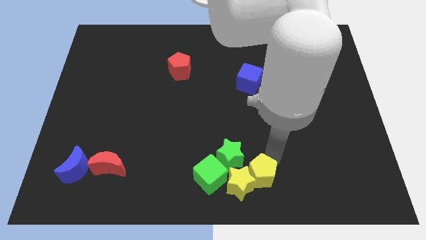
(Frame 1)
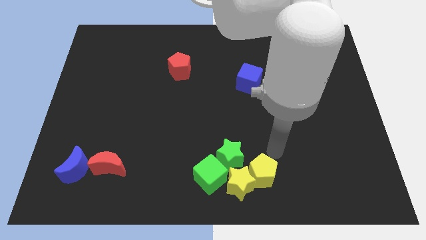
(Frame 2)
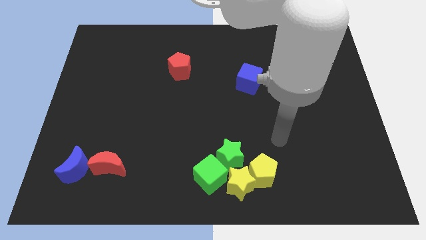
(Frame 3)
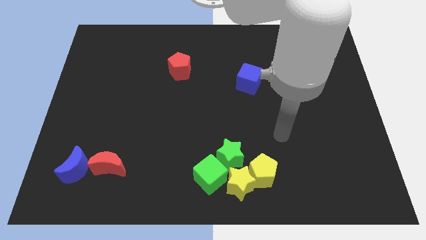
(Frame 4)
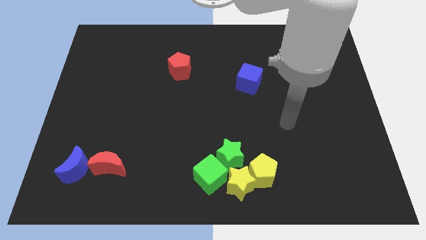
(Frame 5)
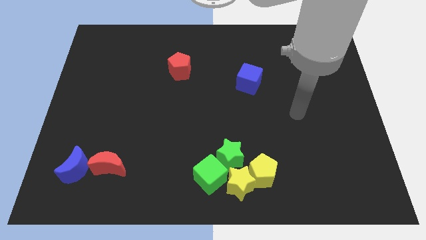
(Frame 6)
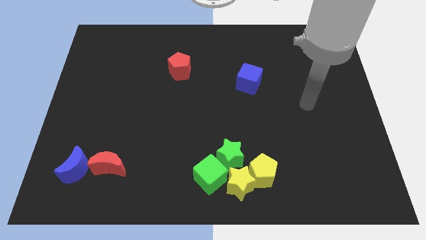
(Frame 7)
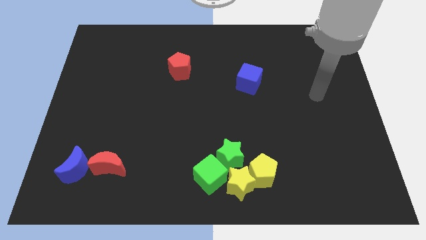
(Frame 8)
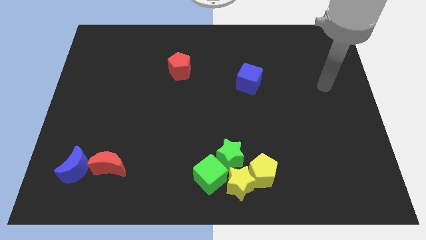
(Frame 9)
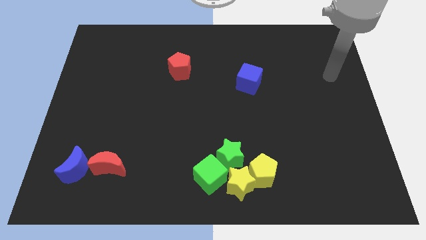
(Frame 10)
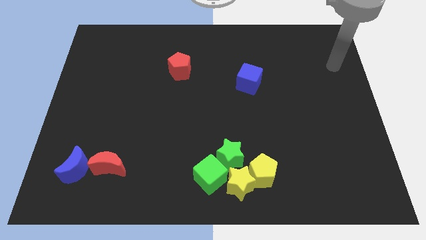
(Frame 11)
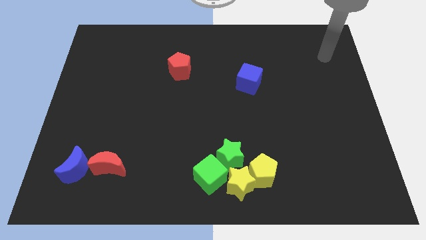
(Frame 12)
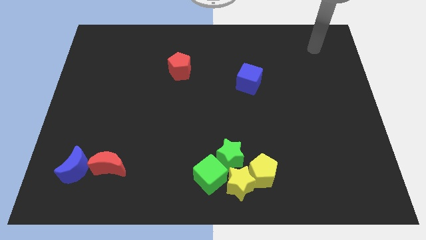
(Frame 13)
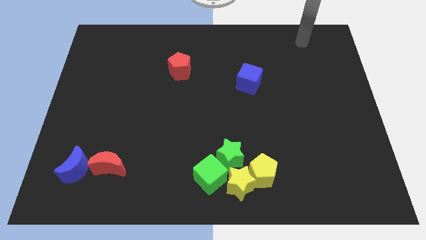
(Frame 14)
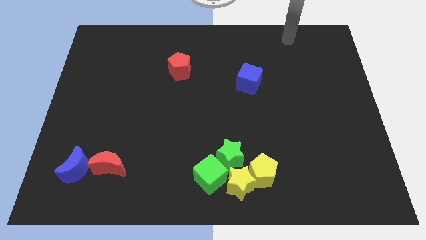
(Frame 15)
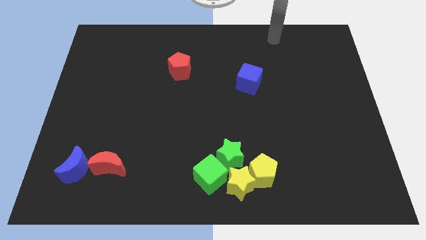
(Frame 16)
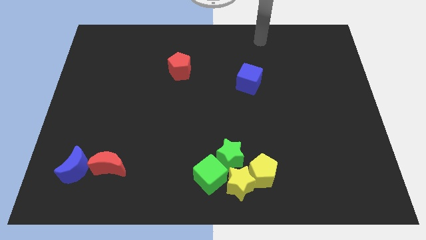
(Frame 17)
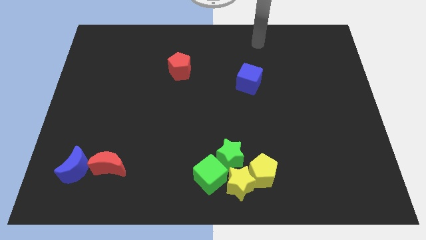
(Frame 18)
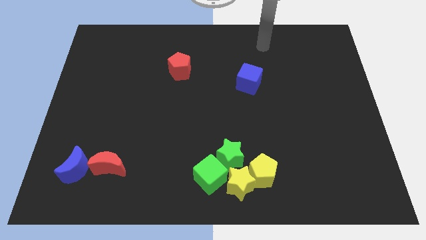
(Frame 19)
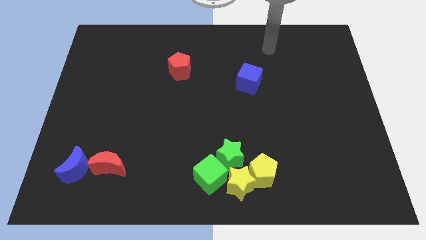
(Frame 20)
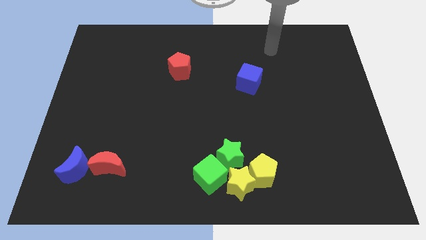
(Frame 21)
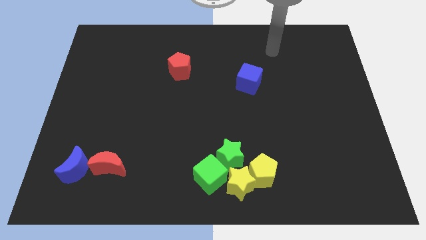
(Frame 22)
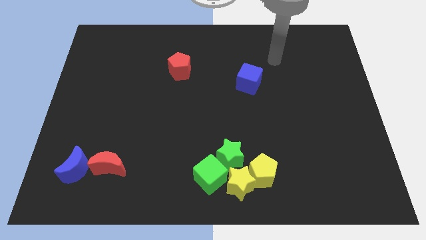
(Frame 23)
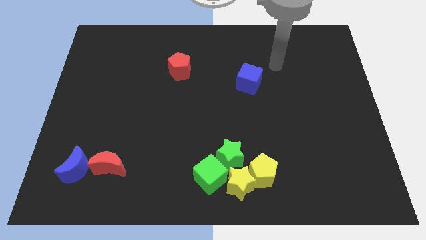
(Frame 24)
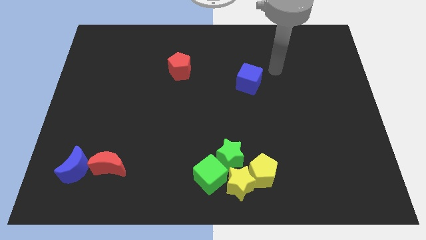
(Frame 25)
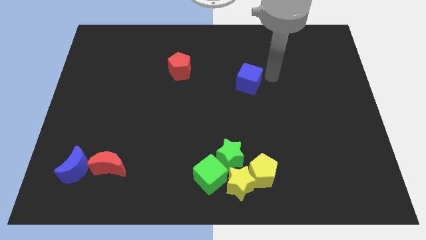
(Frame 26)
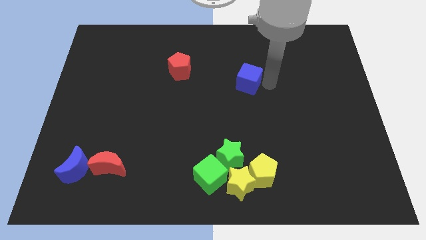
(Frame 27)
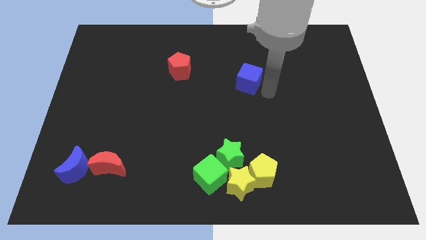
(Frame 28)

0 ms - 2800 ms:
point your arm to the right side of blue cube

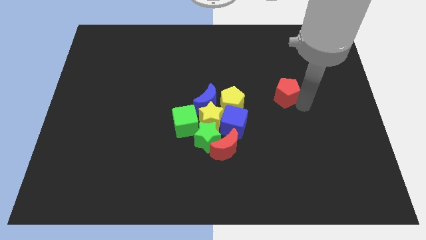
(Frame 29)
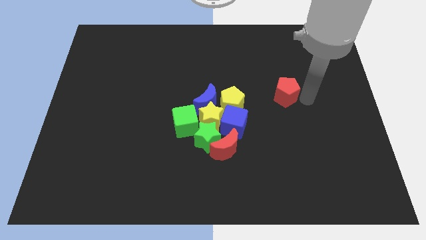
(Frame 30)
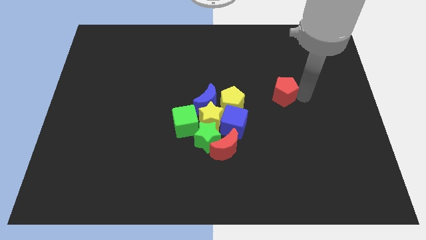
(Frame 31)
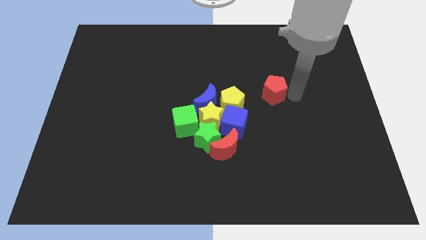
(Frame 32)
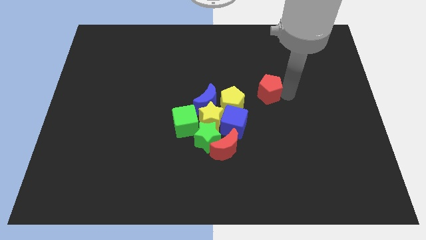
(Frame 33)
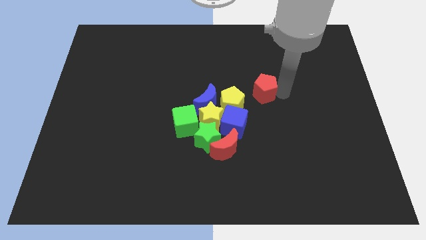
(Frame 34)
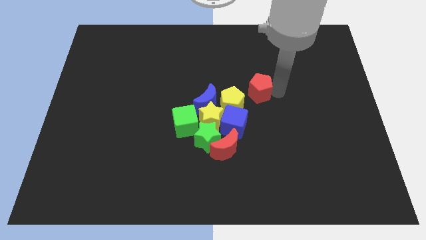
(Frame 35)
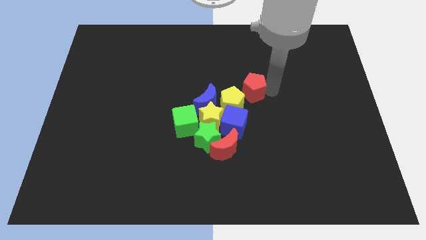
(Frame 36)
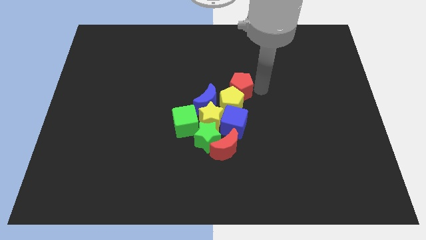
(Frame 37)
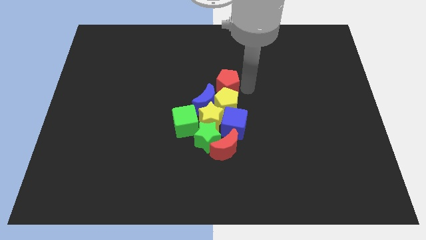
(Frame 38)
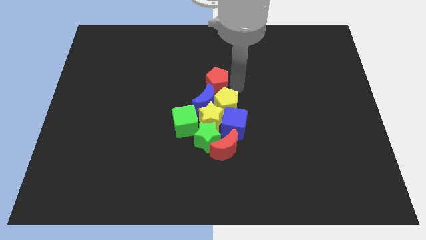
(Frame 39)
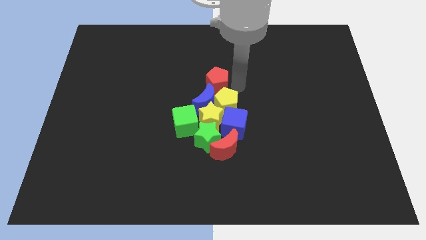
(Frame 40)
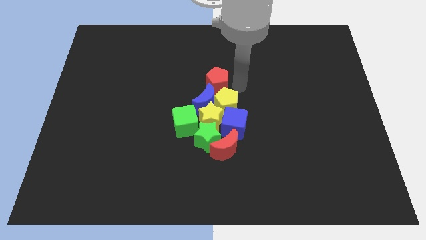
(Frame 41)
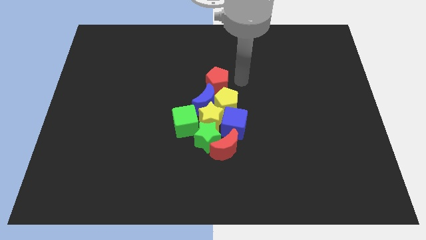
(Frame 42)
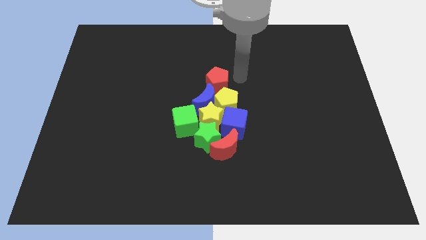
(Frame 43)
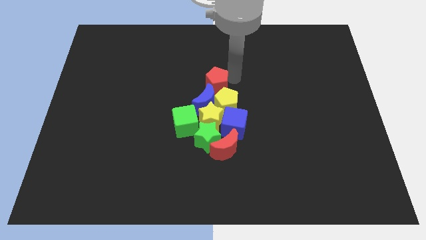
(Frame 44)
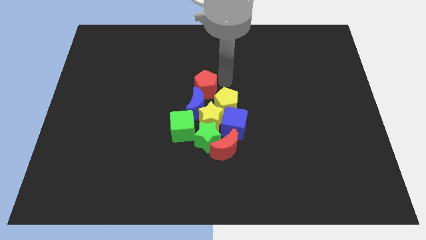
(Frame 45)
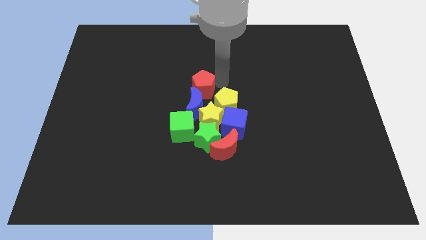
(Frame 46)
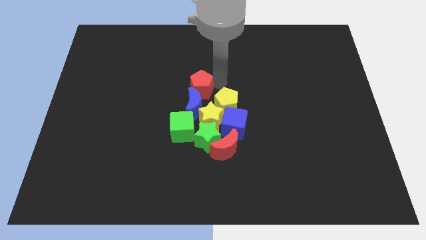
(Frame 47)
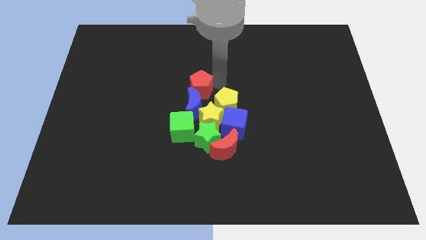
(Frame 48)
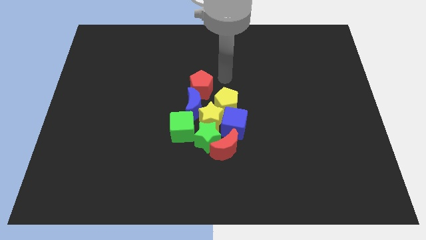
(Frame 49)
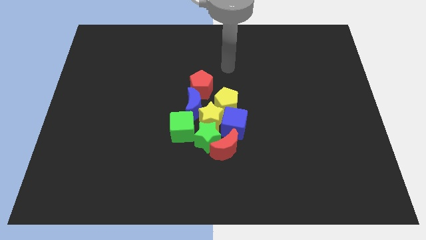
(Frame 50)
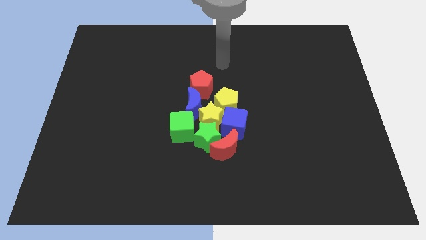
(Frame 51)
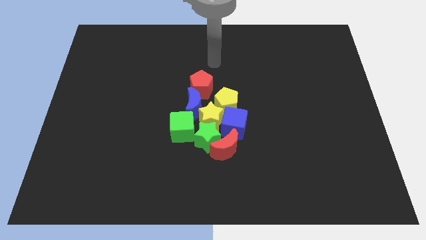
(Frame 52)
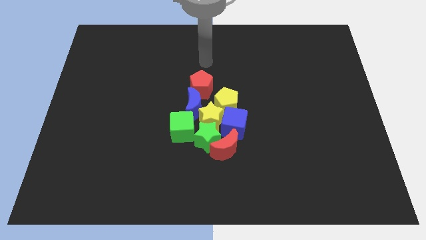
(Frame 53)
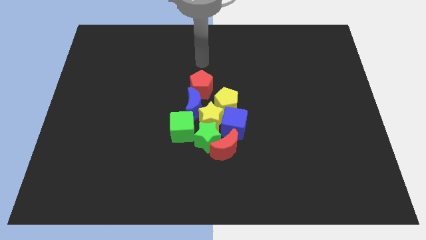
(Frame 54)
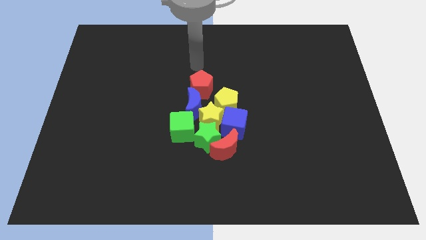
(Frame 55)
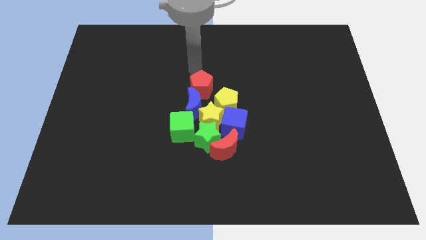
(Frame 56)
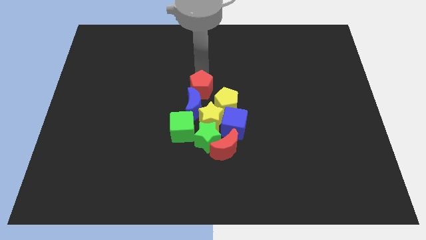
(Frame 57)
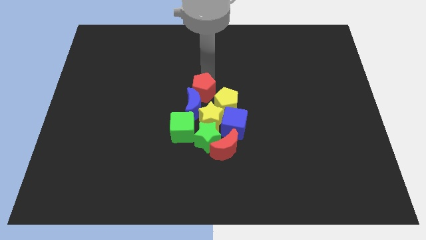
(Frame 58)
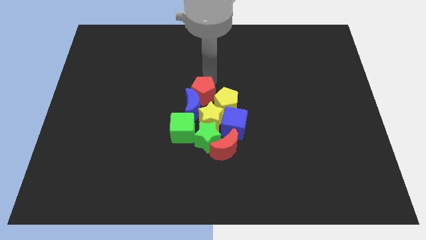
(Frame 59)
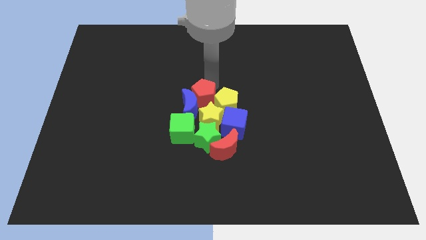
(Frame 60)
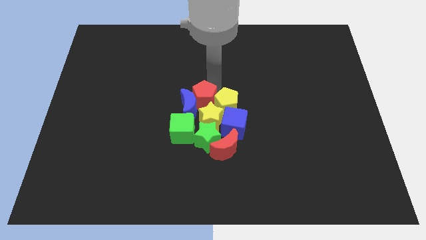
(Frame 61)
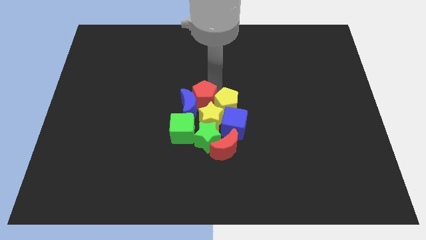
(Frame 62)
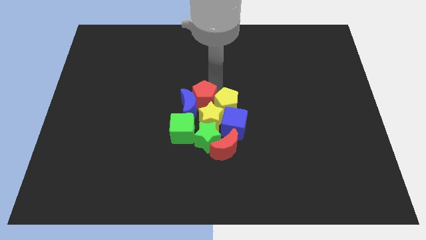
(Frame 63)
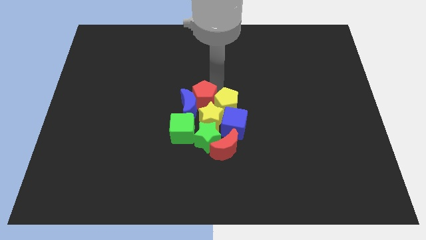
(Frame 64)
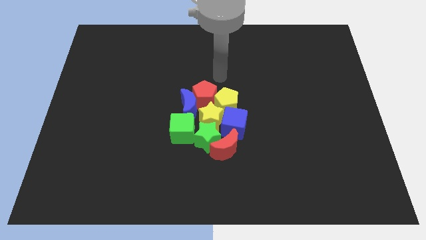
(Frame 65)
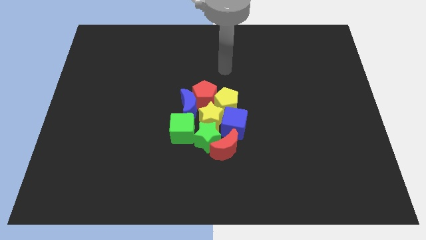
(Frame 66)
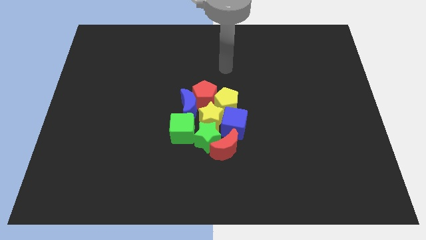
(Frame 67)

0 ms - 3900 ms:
push the red pentagon in between the yellow pentagon and the blue crescent

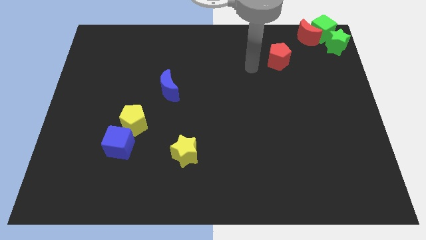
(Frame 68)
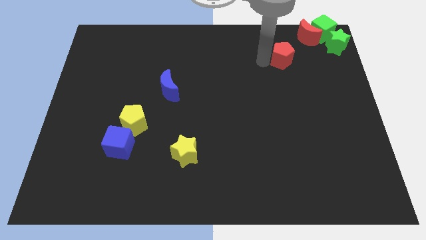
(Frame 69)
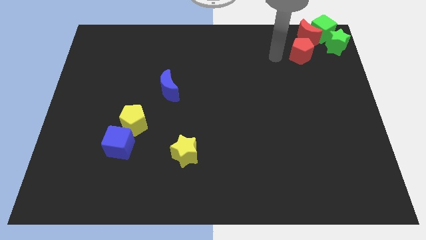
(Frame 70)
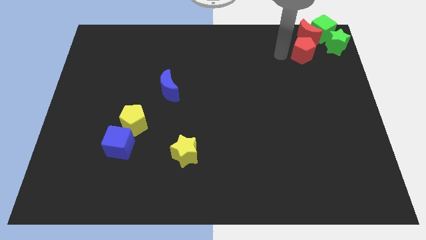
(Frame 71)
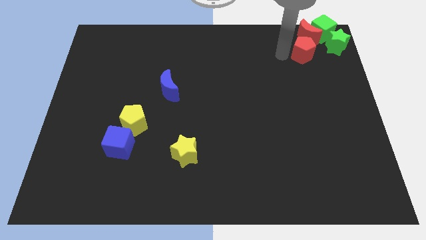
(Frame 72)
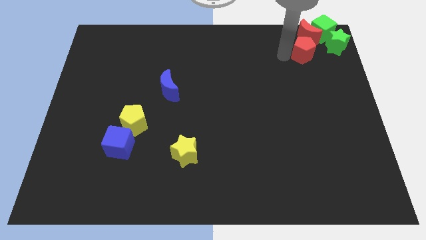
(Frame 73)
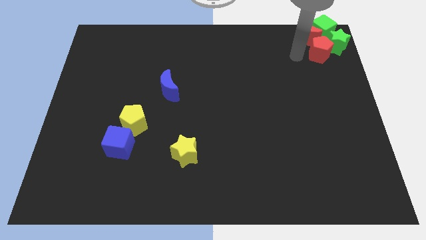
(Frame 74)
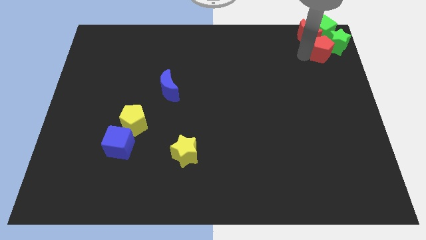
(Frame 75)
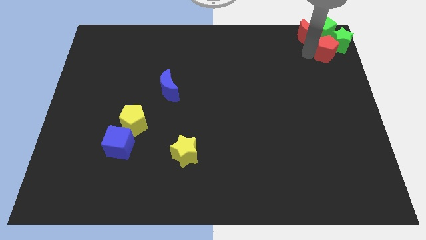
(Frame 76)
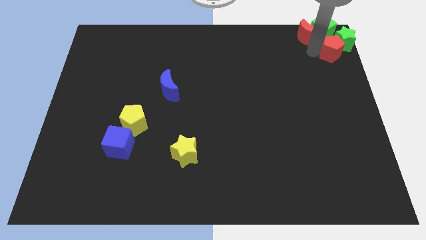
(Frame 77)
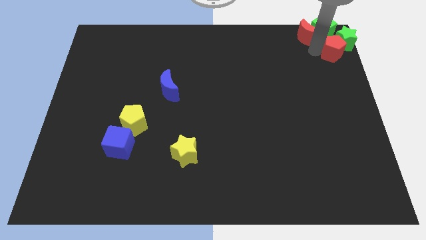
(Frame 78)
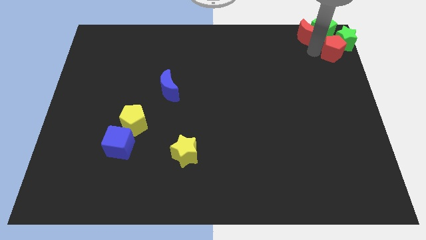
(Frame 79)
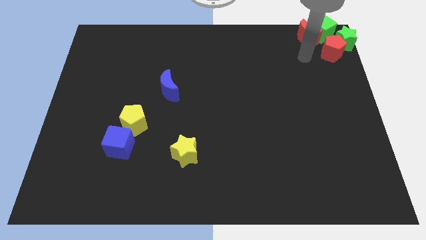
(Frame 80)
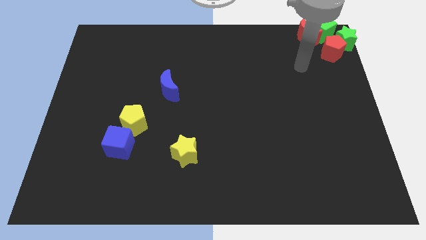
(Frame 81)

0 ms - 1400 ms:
move the red pentagon to the left of the green star

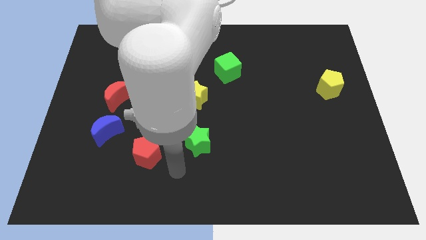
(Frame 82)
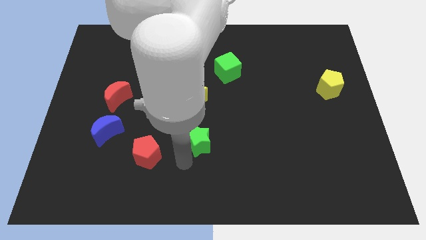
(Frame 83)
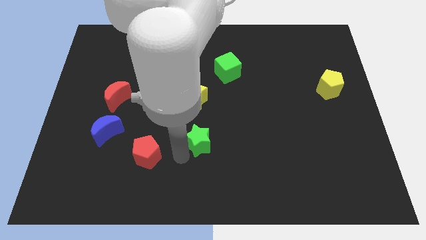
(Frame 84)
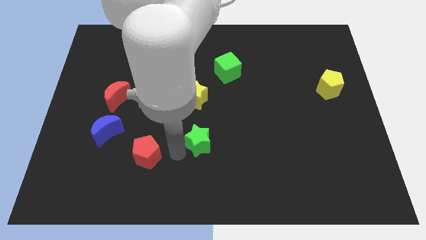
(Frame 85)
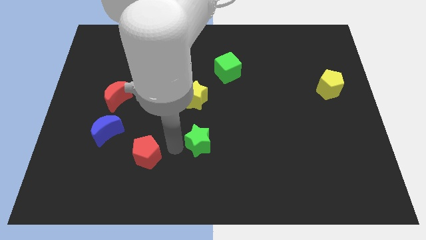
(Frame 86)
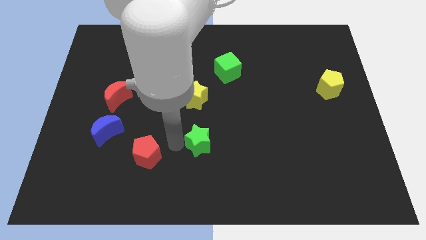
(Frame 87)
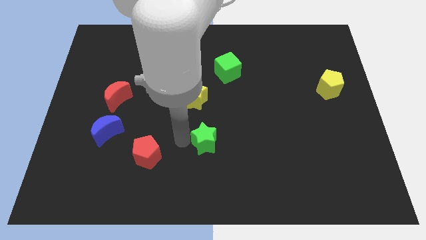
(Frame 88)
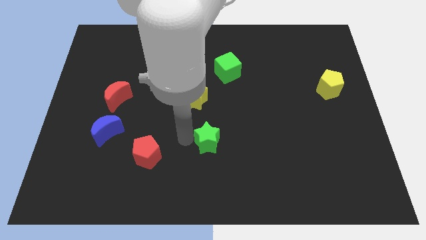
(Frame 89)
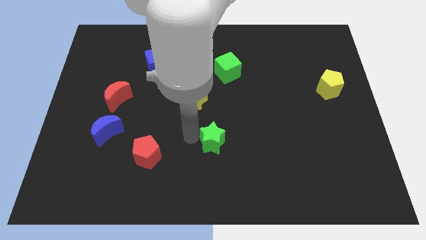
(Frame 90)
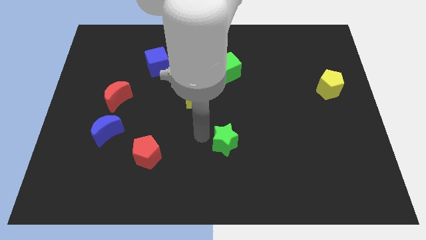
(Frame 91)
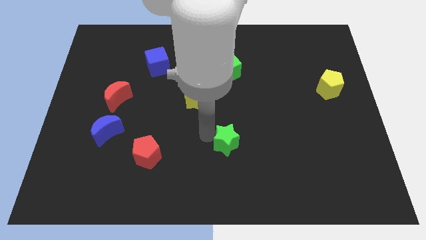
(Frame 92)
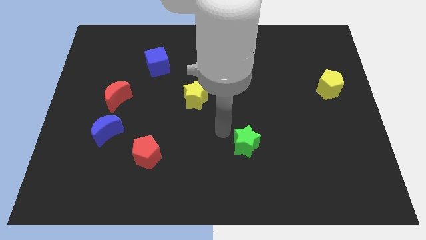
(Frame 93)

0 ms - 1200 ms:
push the green star towards the right side of the board
